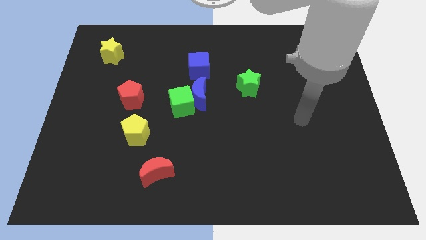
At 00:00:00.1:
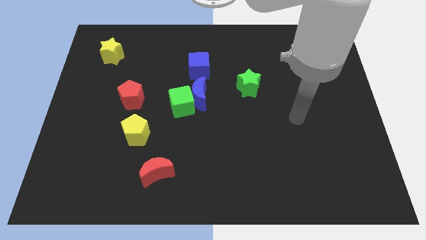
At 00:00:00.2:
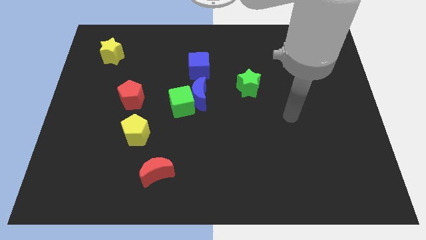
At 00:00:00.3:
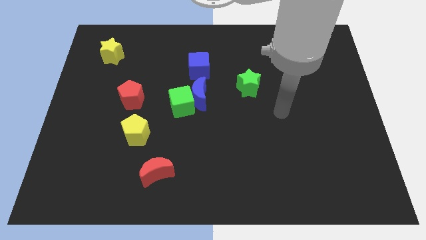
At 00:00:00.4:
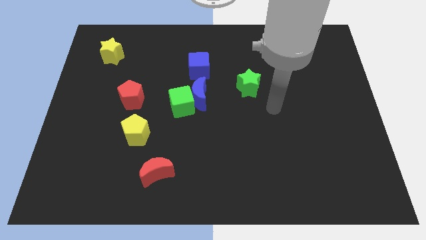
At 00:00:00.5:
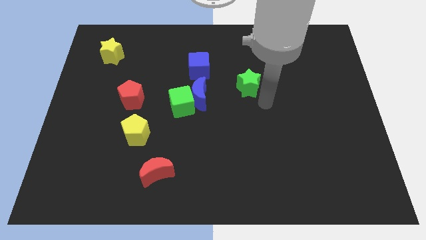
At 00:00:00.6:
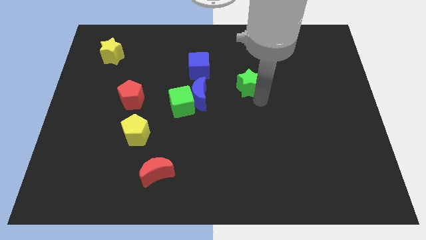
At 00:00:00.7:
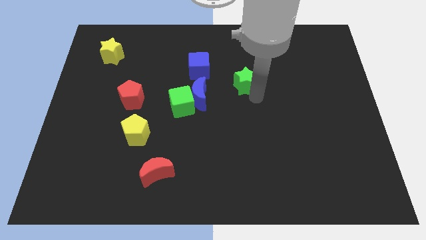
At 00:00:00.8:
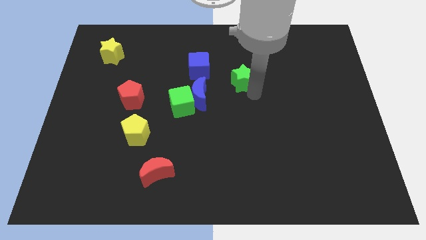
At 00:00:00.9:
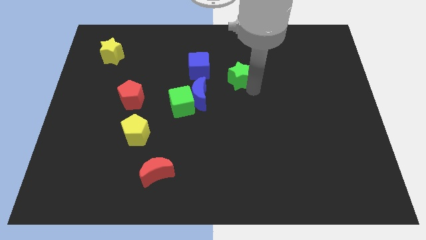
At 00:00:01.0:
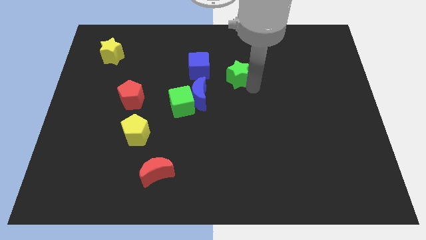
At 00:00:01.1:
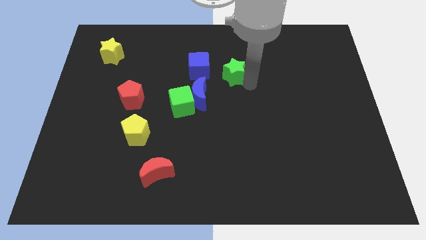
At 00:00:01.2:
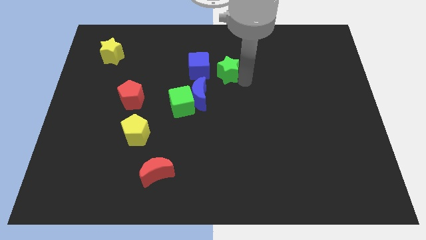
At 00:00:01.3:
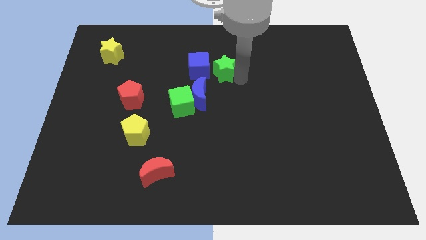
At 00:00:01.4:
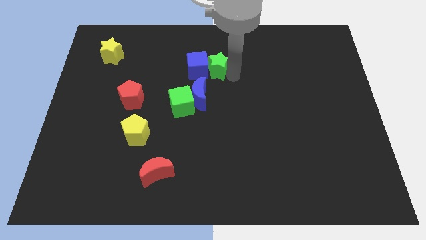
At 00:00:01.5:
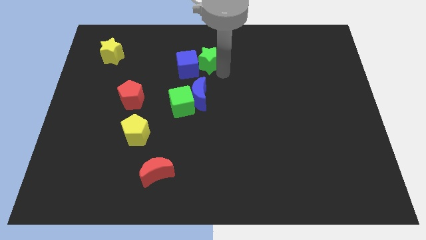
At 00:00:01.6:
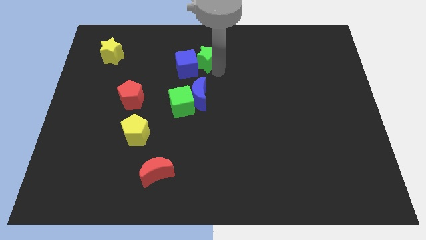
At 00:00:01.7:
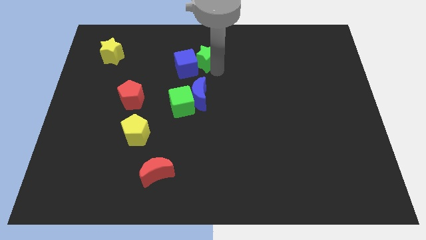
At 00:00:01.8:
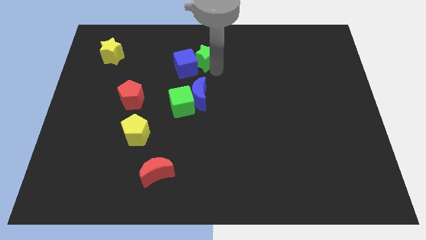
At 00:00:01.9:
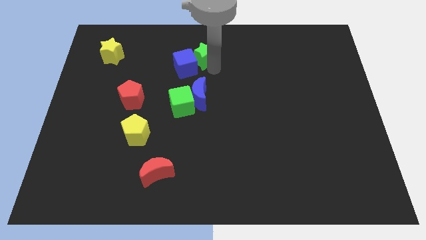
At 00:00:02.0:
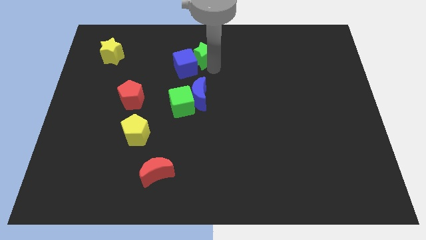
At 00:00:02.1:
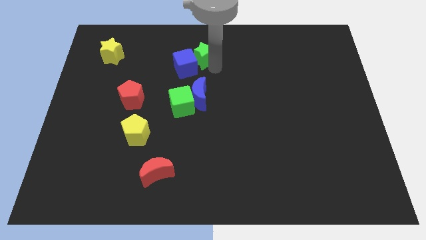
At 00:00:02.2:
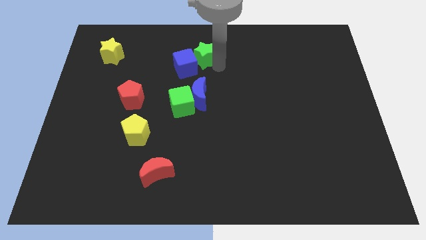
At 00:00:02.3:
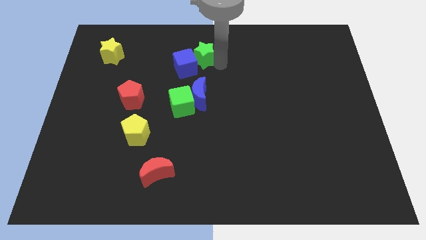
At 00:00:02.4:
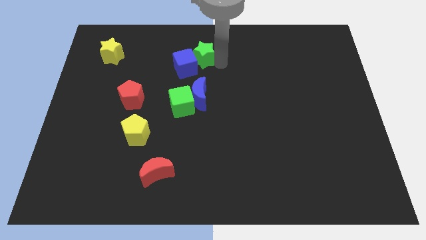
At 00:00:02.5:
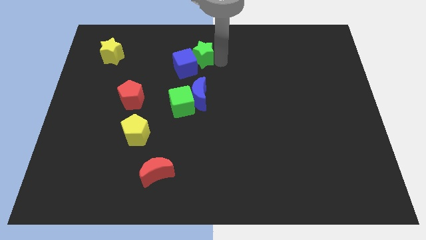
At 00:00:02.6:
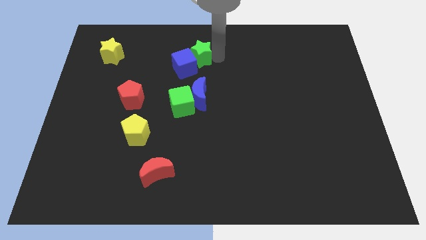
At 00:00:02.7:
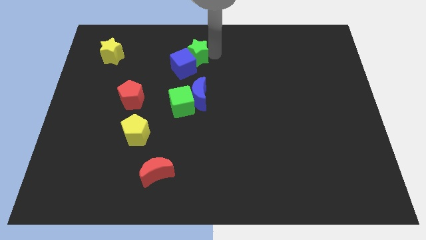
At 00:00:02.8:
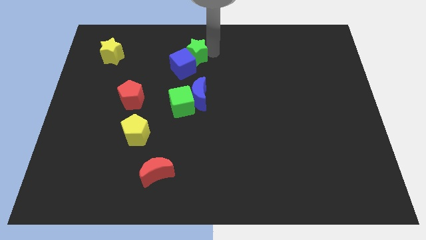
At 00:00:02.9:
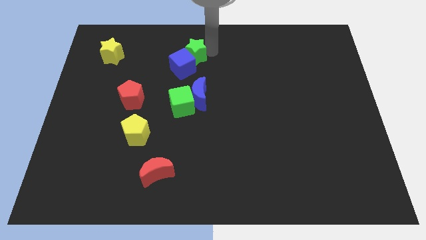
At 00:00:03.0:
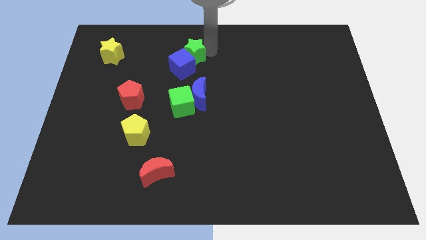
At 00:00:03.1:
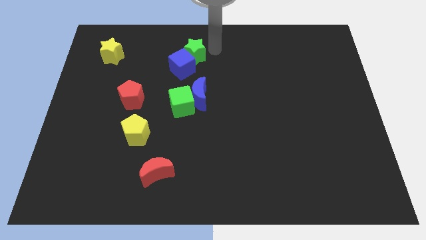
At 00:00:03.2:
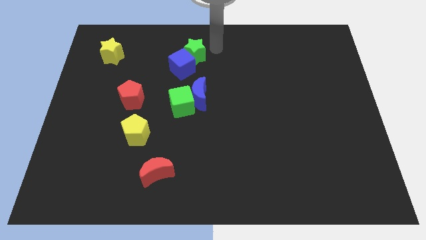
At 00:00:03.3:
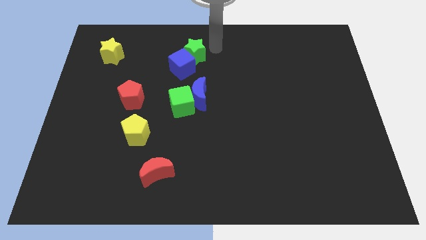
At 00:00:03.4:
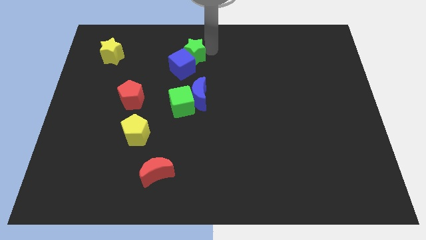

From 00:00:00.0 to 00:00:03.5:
push the green star into the blue cube

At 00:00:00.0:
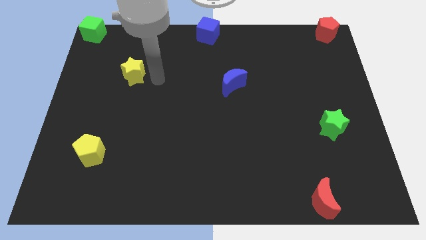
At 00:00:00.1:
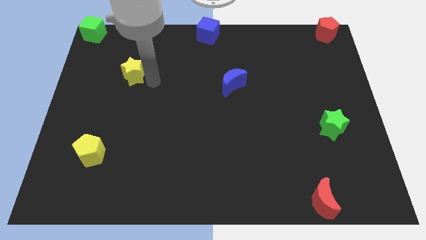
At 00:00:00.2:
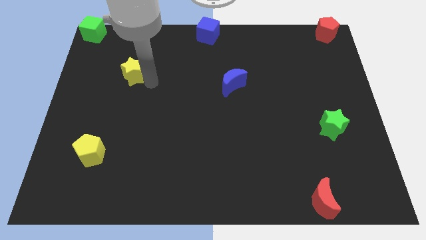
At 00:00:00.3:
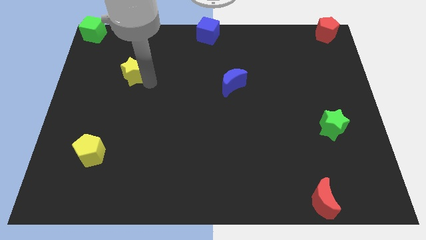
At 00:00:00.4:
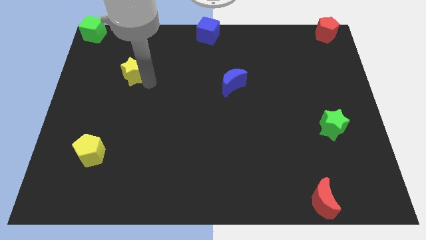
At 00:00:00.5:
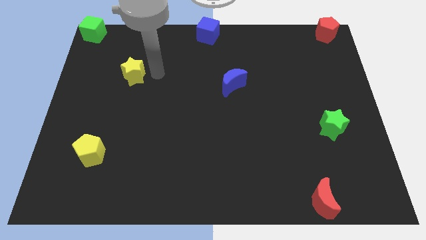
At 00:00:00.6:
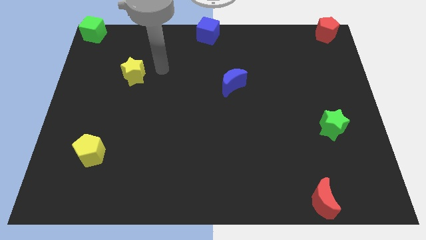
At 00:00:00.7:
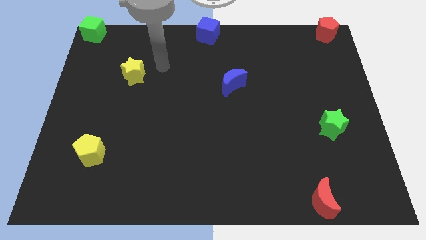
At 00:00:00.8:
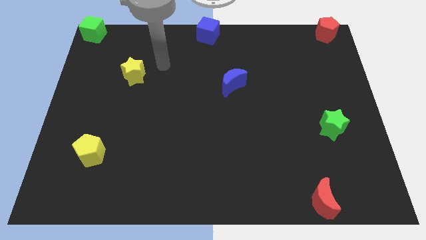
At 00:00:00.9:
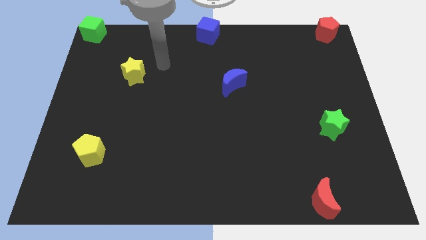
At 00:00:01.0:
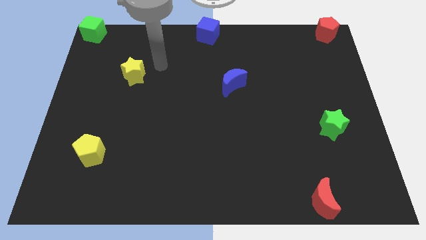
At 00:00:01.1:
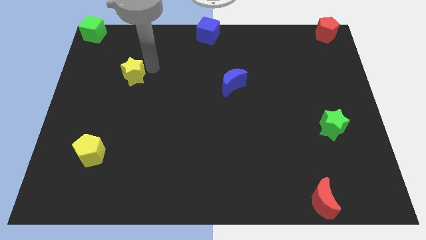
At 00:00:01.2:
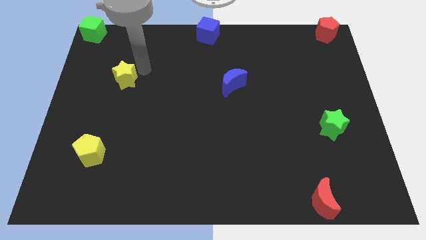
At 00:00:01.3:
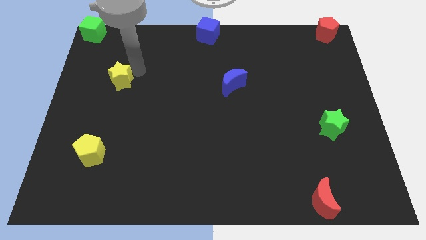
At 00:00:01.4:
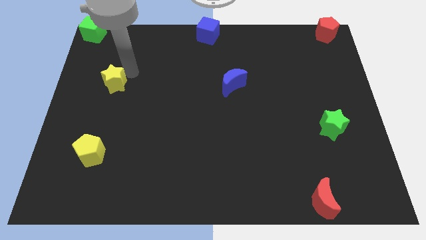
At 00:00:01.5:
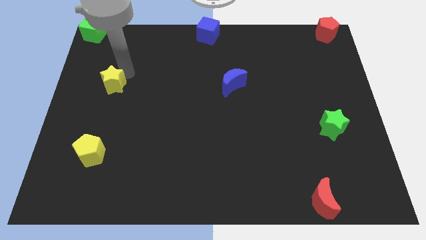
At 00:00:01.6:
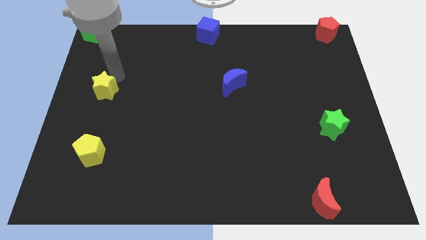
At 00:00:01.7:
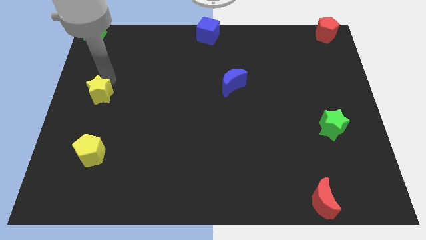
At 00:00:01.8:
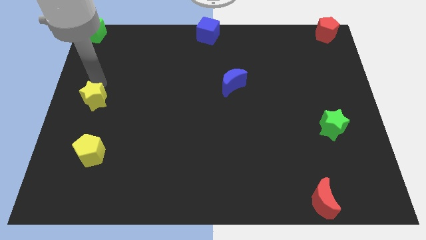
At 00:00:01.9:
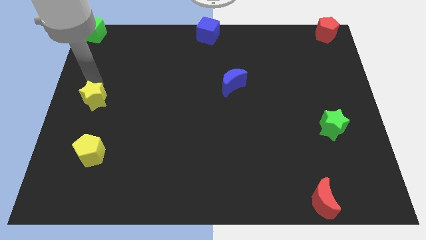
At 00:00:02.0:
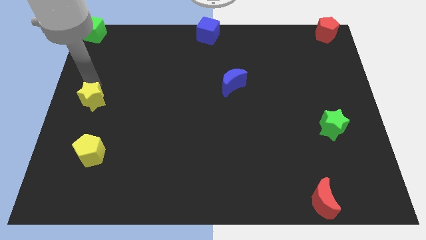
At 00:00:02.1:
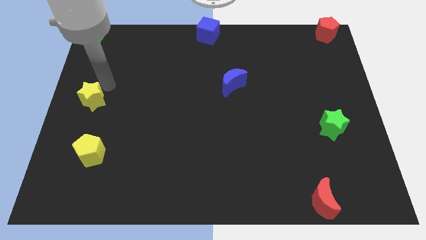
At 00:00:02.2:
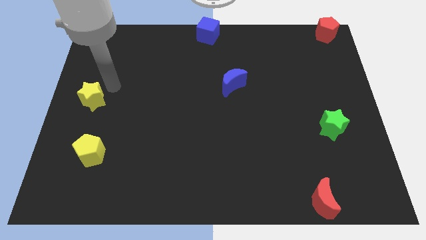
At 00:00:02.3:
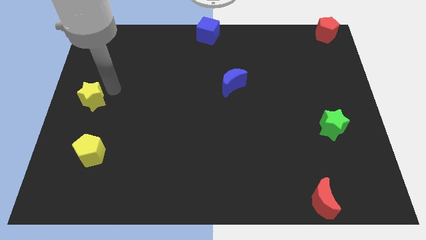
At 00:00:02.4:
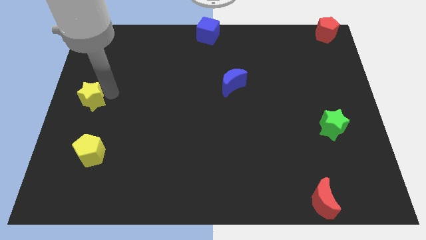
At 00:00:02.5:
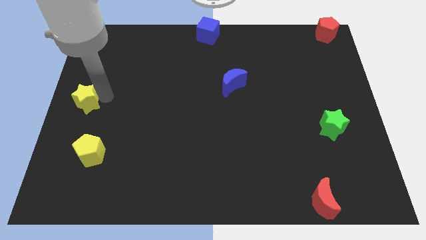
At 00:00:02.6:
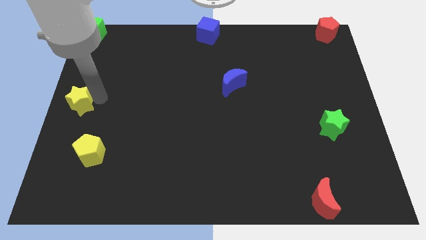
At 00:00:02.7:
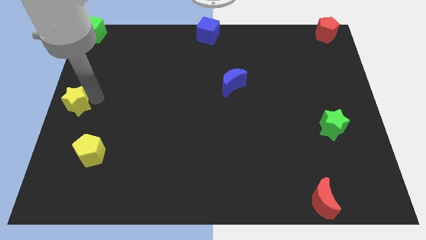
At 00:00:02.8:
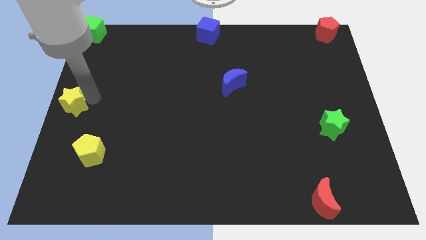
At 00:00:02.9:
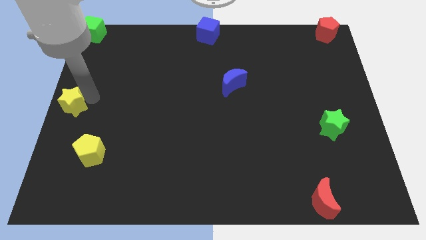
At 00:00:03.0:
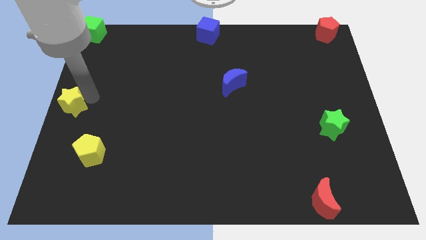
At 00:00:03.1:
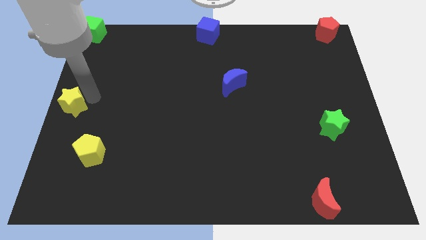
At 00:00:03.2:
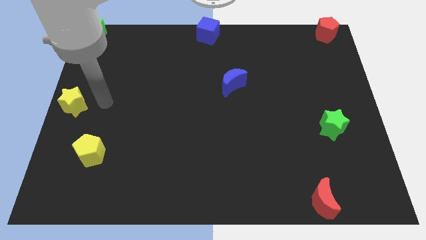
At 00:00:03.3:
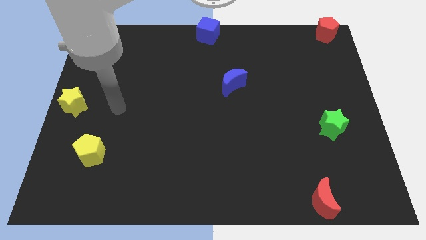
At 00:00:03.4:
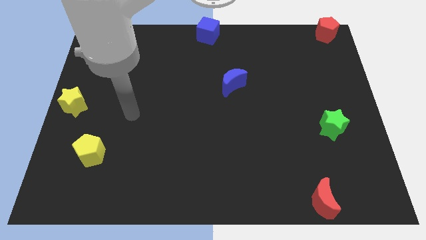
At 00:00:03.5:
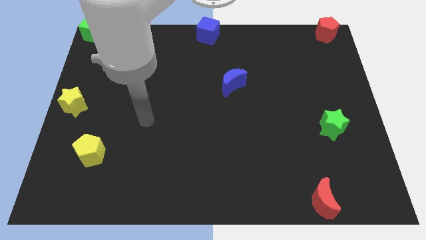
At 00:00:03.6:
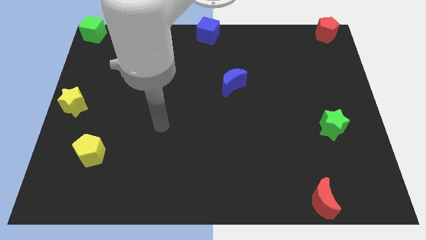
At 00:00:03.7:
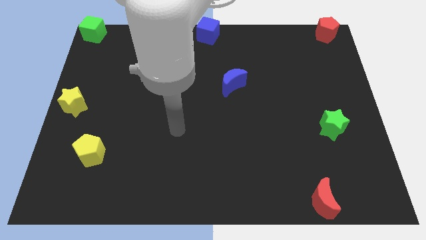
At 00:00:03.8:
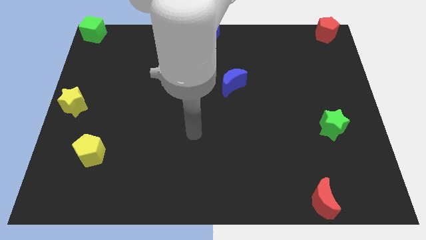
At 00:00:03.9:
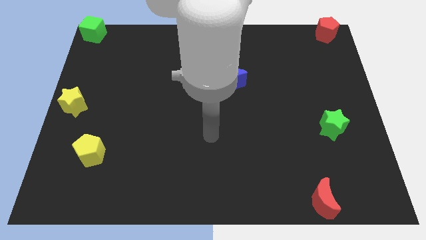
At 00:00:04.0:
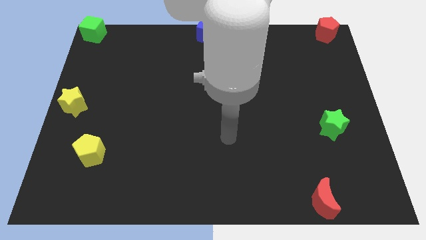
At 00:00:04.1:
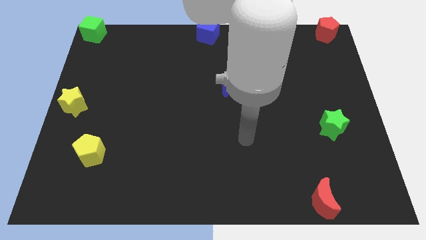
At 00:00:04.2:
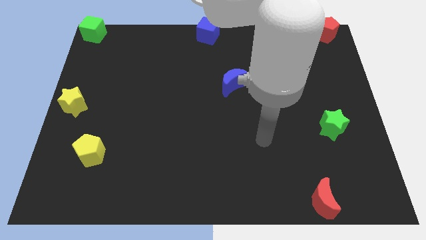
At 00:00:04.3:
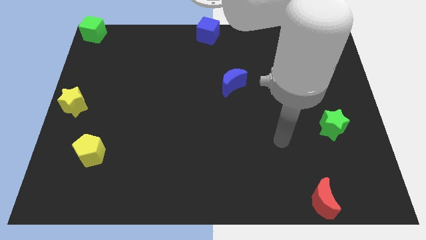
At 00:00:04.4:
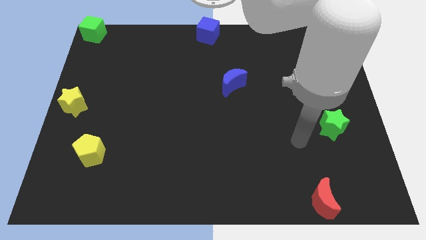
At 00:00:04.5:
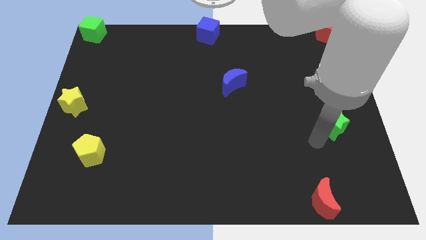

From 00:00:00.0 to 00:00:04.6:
drag the yellow star slightly downwards

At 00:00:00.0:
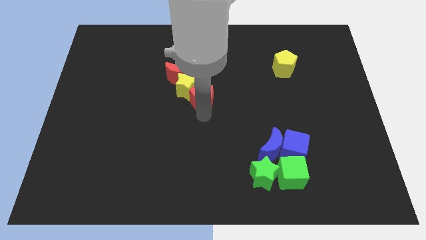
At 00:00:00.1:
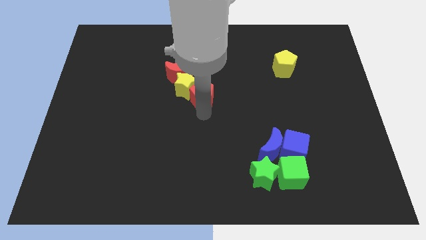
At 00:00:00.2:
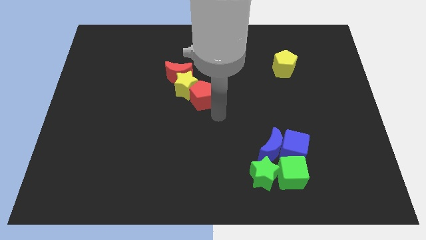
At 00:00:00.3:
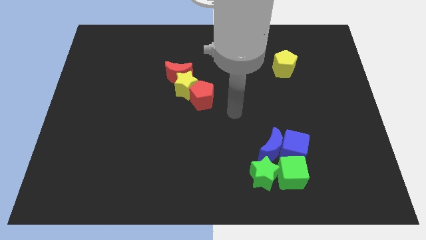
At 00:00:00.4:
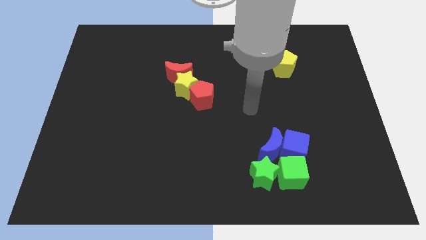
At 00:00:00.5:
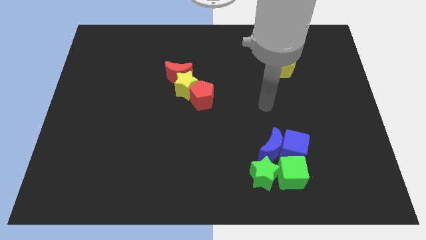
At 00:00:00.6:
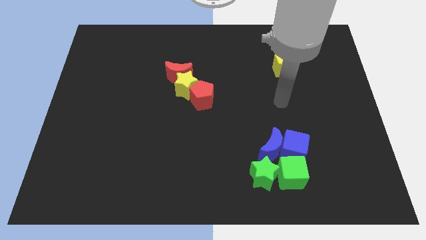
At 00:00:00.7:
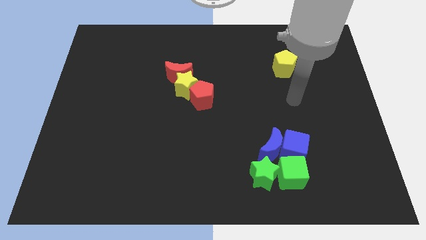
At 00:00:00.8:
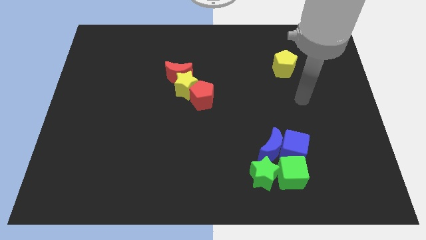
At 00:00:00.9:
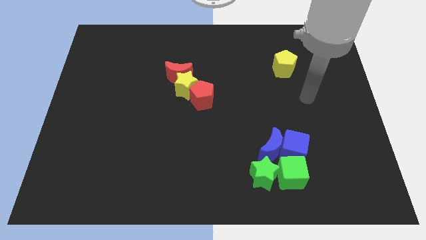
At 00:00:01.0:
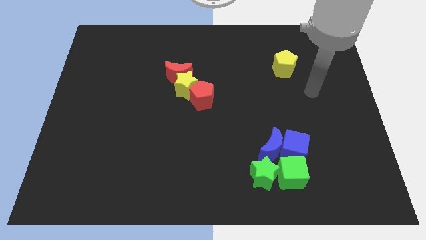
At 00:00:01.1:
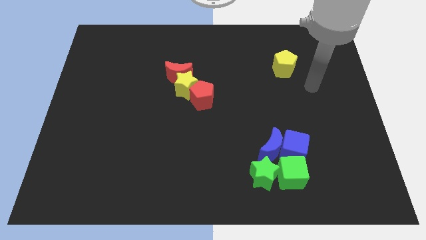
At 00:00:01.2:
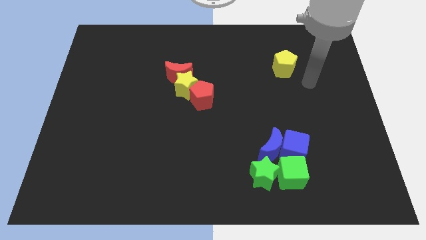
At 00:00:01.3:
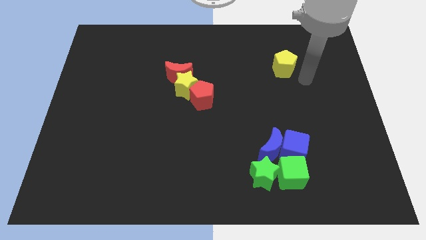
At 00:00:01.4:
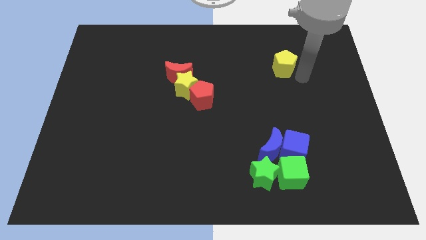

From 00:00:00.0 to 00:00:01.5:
move your arm towards the yellow pentagon
